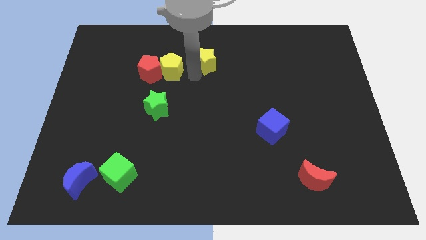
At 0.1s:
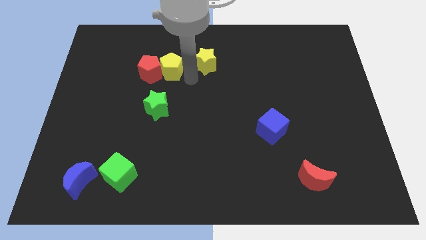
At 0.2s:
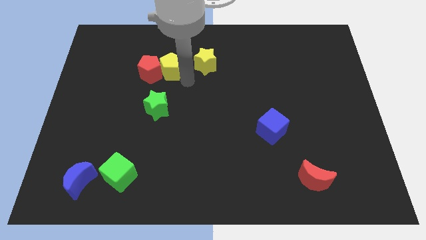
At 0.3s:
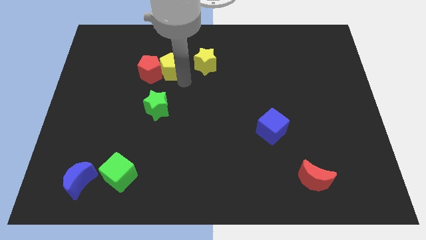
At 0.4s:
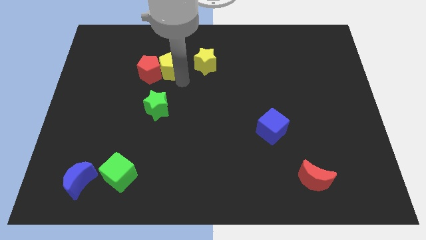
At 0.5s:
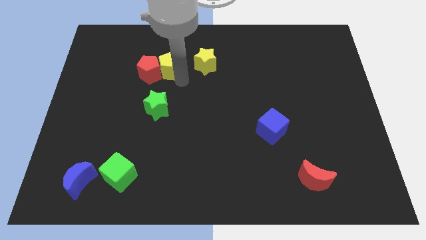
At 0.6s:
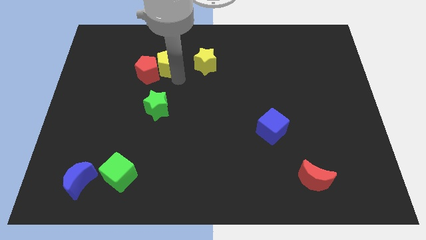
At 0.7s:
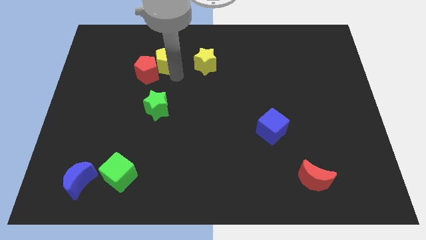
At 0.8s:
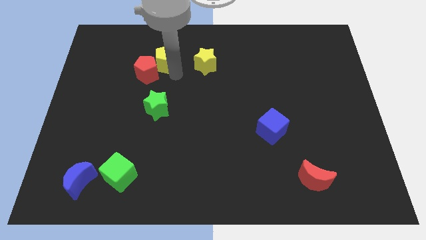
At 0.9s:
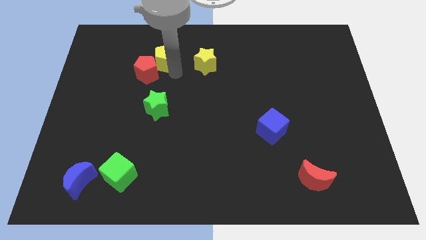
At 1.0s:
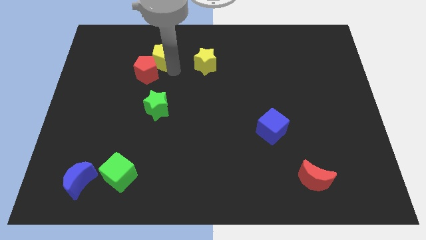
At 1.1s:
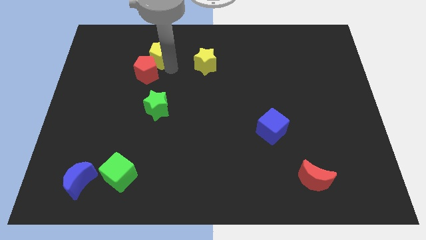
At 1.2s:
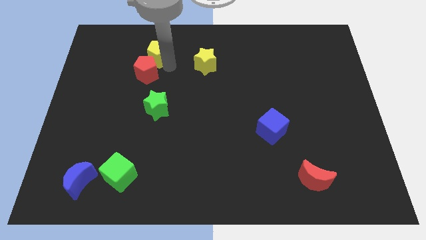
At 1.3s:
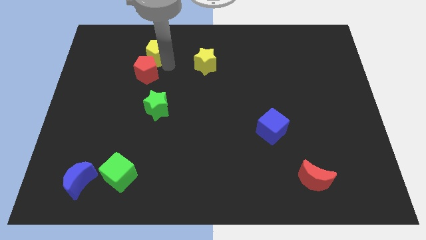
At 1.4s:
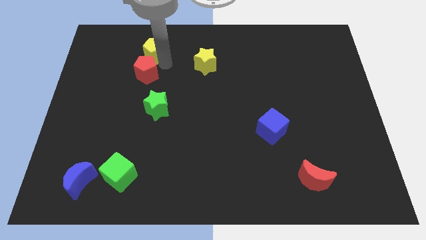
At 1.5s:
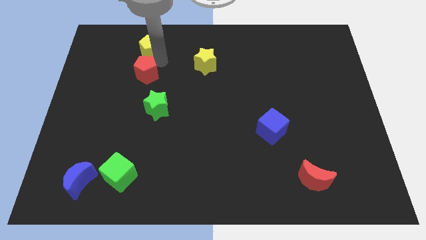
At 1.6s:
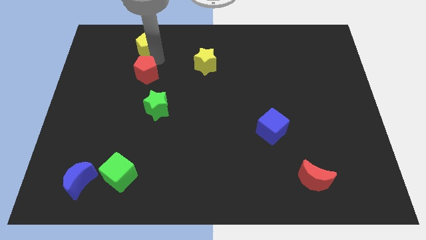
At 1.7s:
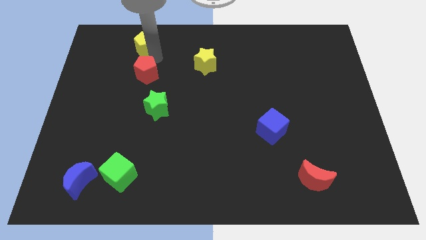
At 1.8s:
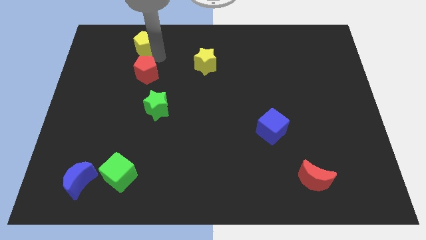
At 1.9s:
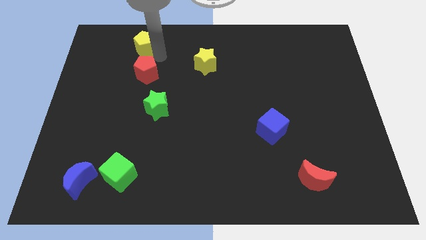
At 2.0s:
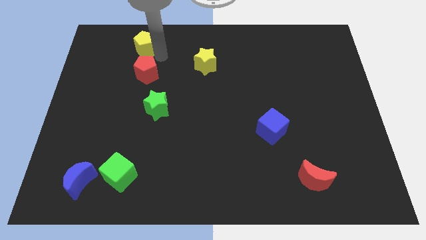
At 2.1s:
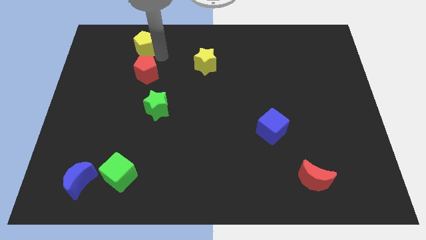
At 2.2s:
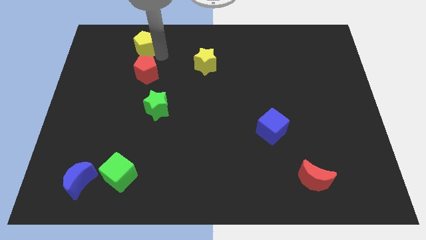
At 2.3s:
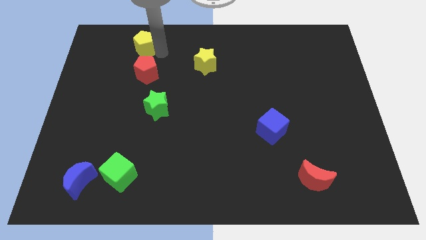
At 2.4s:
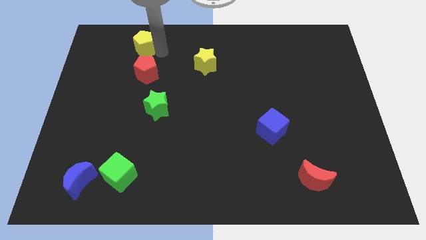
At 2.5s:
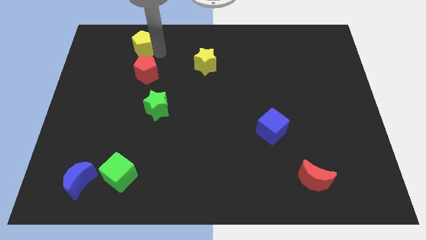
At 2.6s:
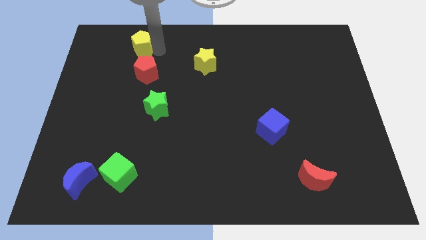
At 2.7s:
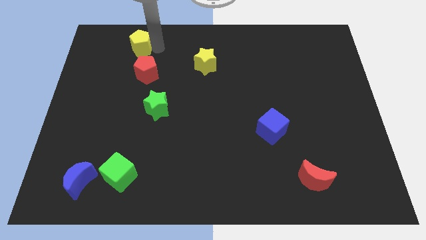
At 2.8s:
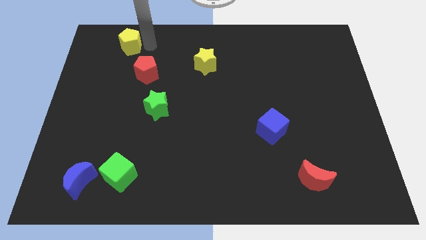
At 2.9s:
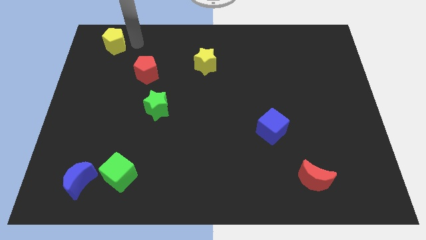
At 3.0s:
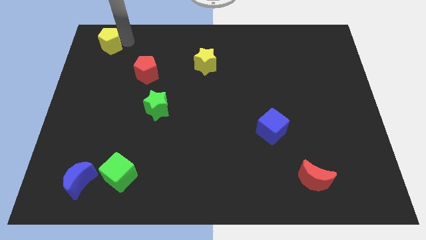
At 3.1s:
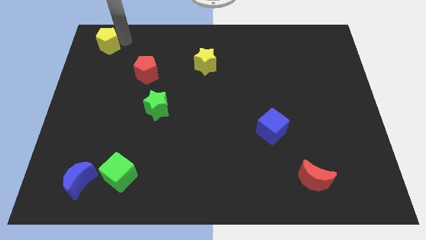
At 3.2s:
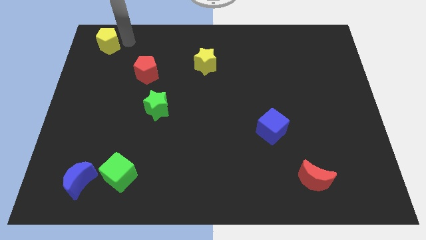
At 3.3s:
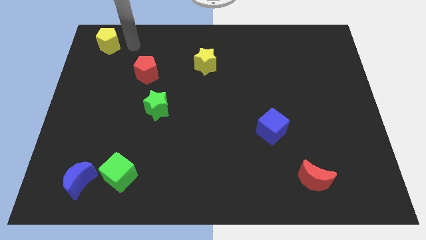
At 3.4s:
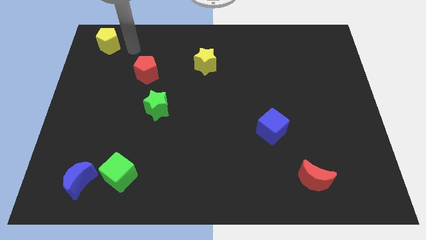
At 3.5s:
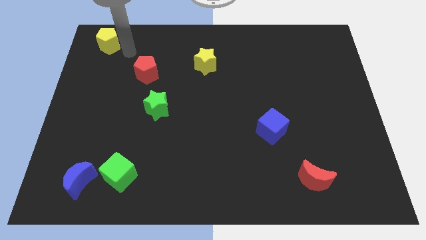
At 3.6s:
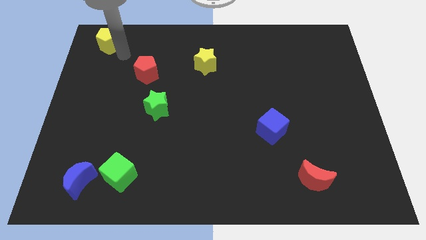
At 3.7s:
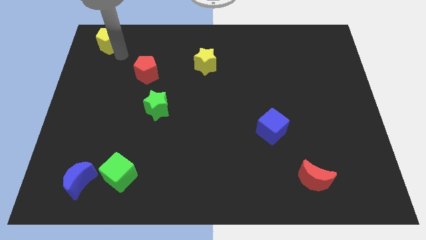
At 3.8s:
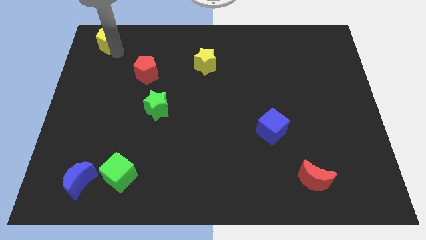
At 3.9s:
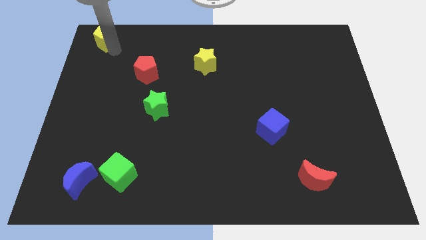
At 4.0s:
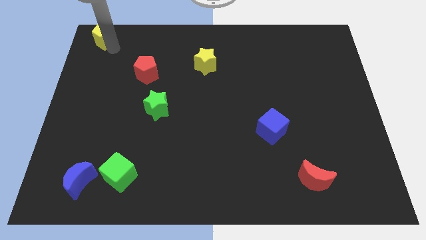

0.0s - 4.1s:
move the yellow pentagon to the top left corner

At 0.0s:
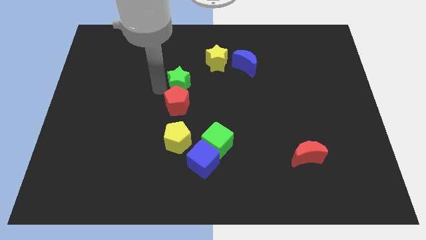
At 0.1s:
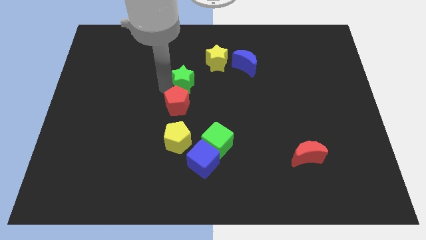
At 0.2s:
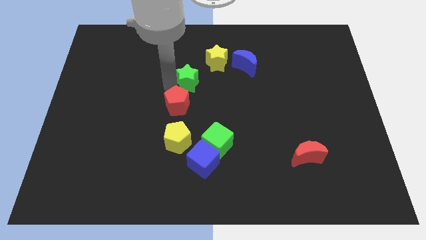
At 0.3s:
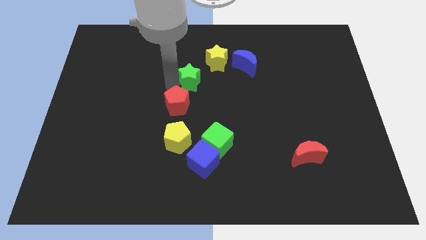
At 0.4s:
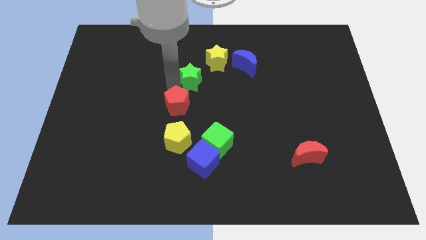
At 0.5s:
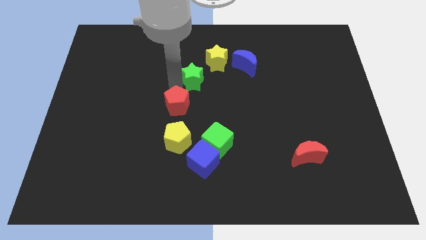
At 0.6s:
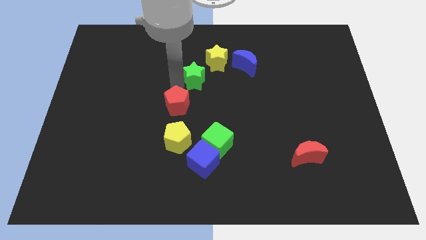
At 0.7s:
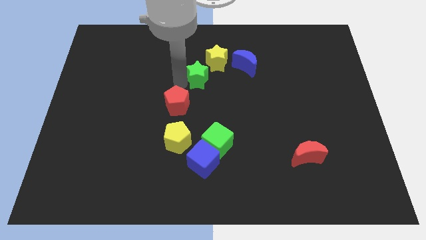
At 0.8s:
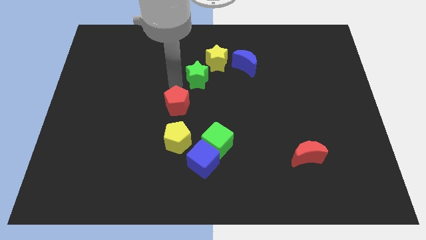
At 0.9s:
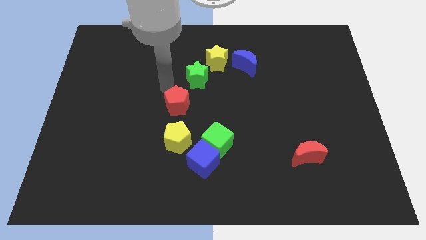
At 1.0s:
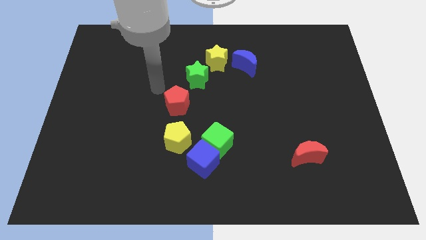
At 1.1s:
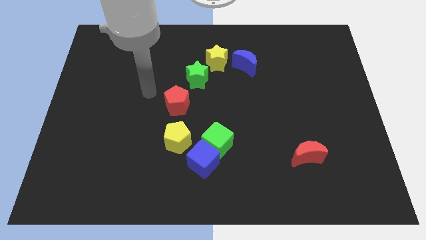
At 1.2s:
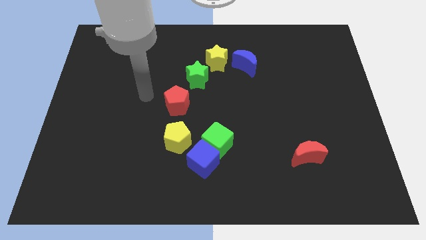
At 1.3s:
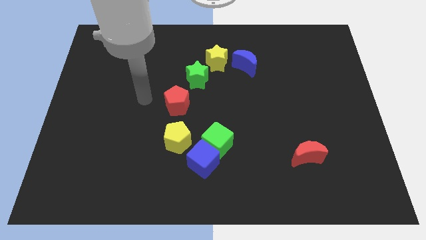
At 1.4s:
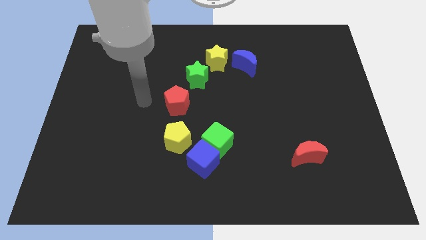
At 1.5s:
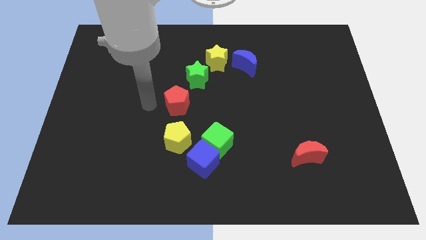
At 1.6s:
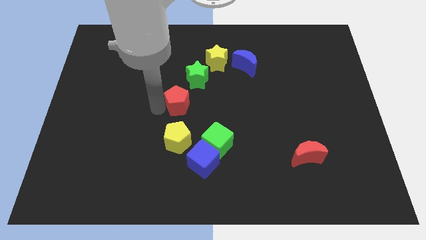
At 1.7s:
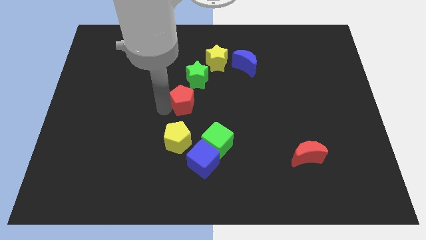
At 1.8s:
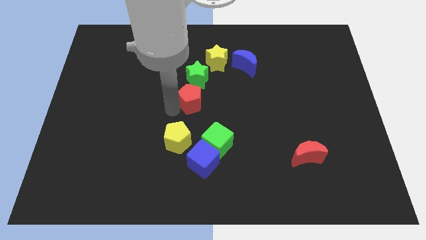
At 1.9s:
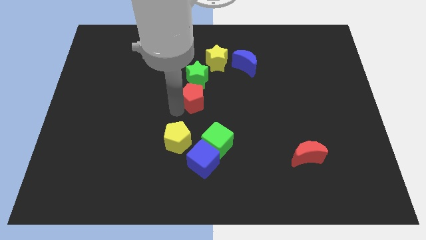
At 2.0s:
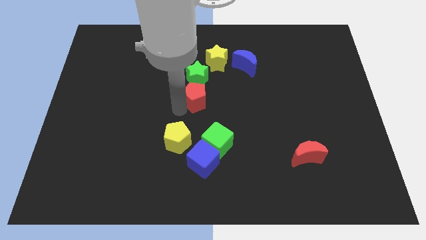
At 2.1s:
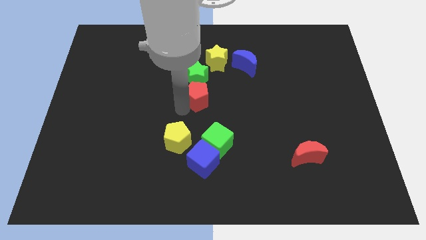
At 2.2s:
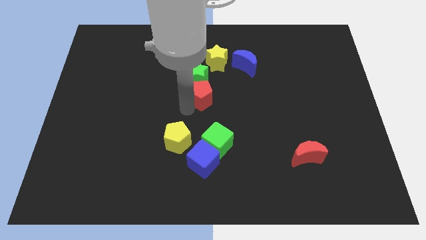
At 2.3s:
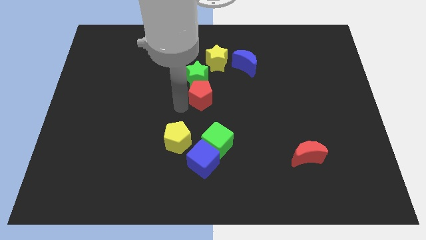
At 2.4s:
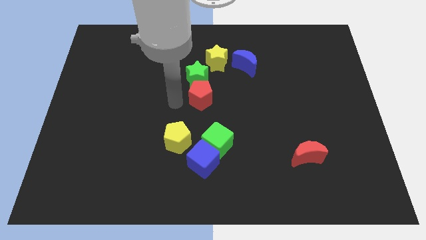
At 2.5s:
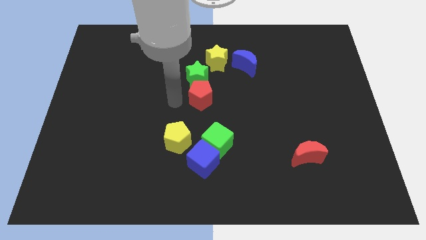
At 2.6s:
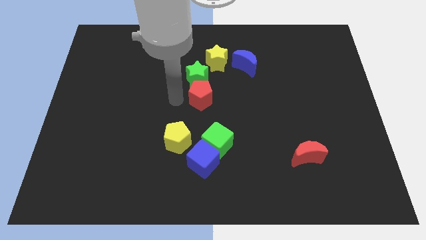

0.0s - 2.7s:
move red pentagon below the green star

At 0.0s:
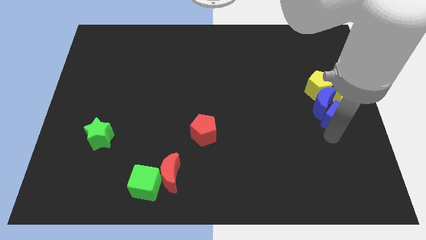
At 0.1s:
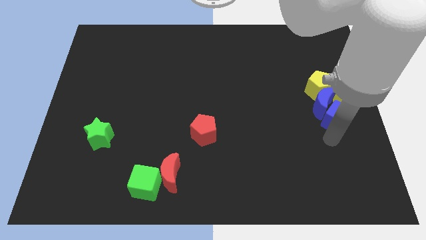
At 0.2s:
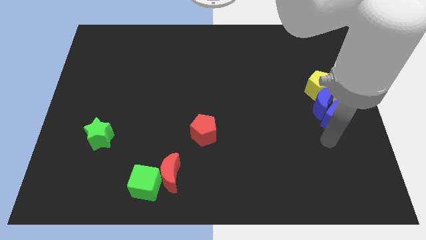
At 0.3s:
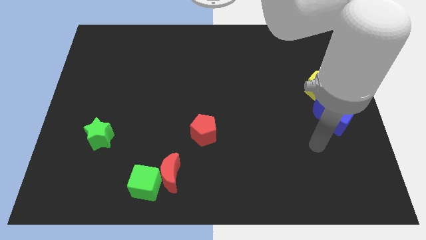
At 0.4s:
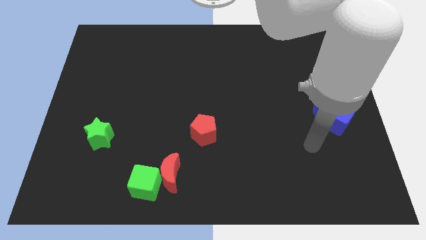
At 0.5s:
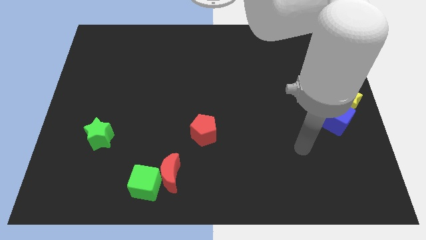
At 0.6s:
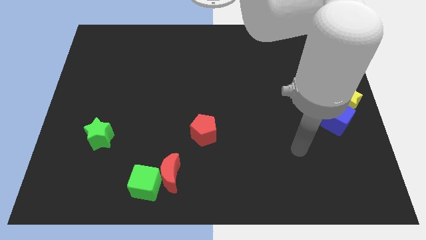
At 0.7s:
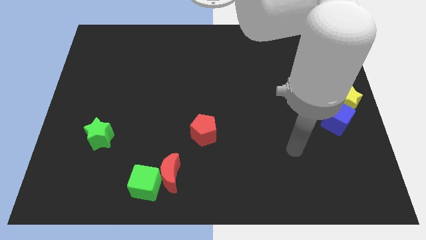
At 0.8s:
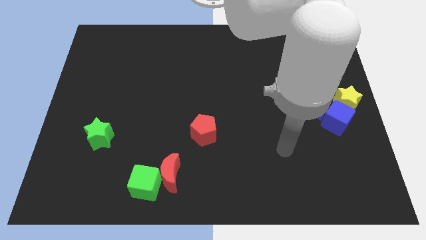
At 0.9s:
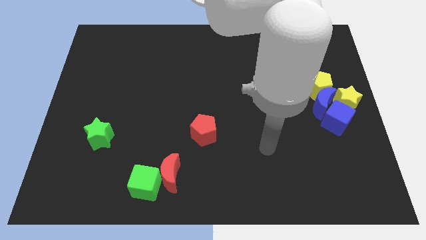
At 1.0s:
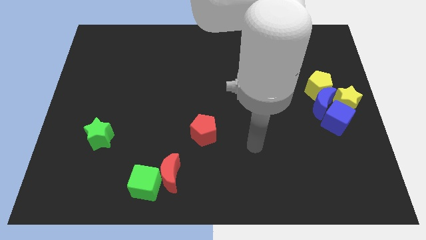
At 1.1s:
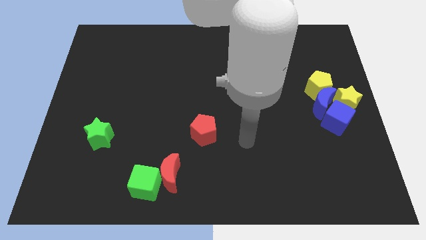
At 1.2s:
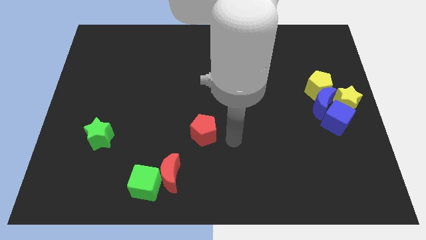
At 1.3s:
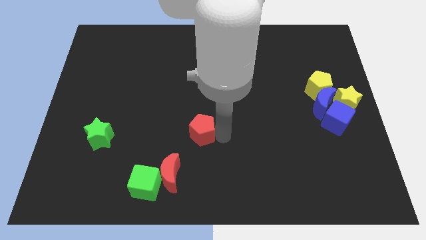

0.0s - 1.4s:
place your arm right to the red pentagon

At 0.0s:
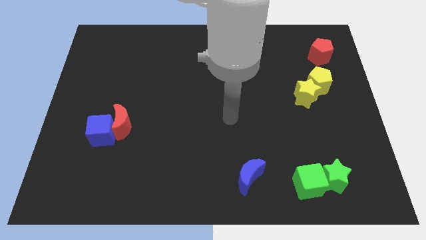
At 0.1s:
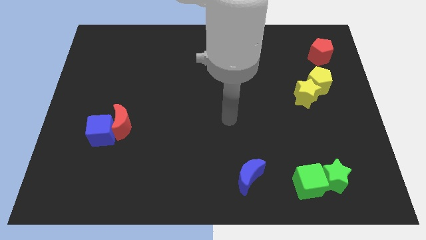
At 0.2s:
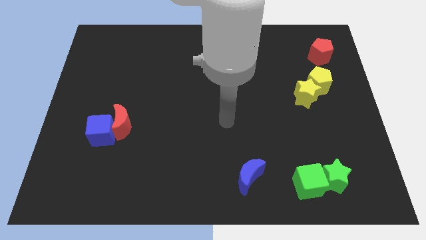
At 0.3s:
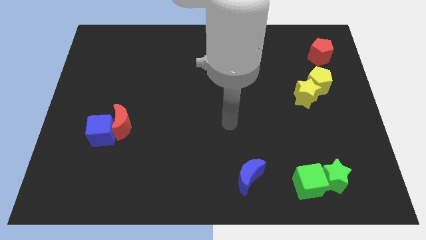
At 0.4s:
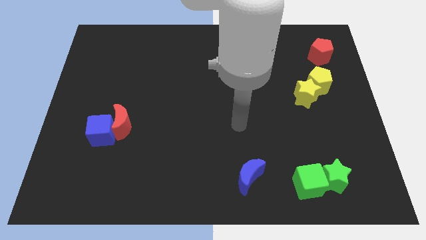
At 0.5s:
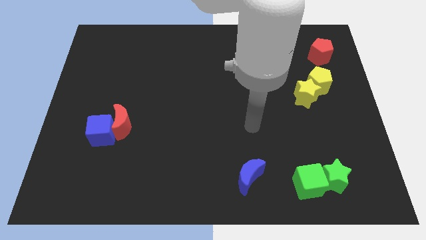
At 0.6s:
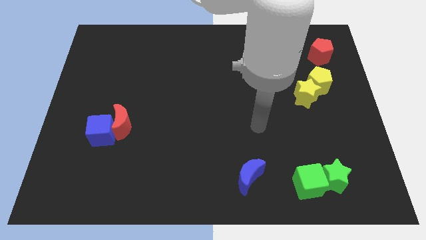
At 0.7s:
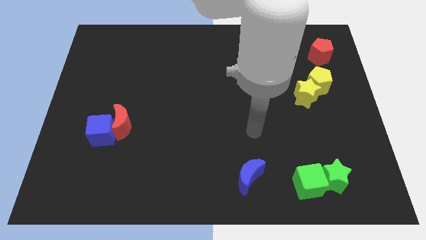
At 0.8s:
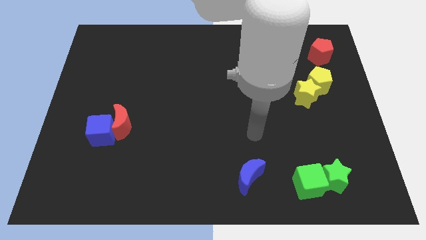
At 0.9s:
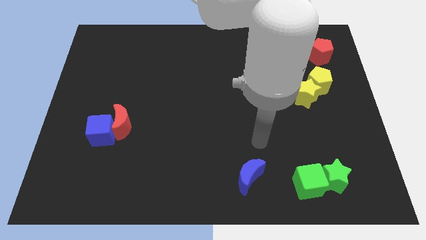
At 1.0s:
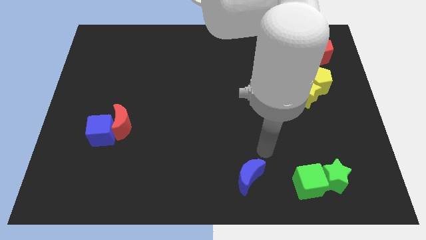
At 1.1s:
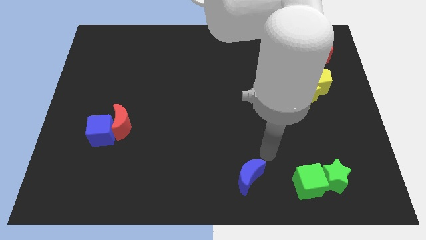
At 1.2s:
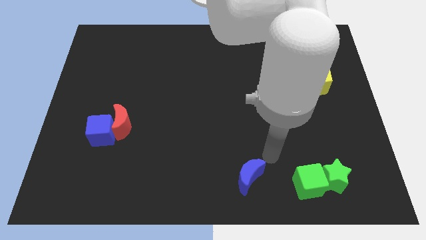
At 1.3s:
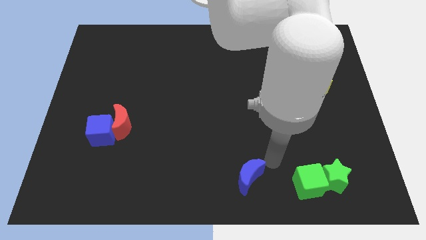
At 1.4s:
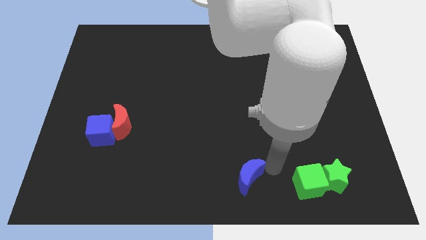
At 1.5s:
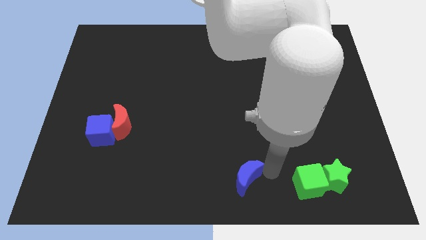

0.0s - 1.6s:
move your arm near to the blue moon
